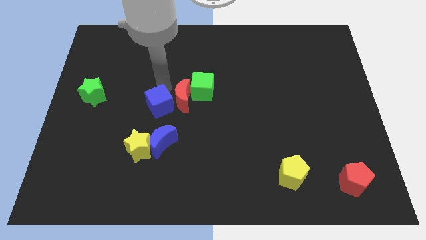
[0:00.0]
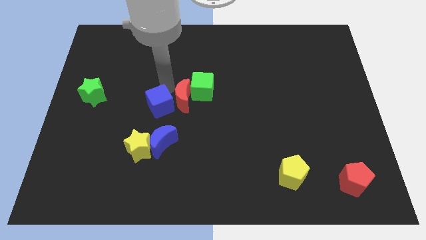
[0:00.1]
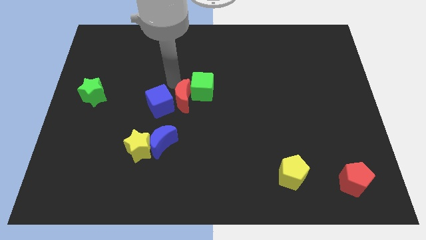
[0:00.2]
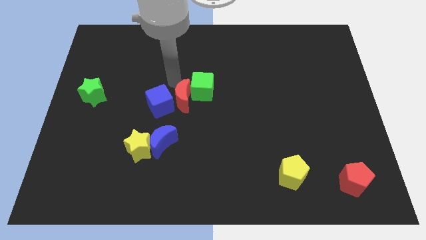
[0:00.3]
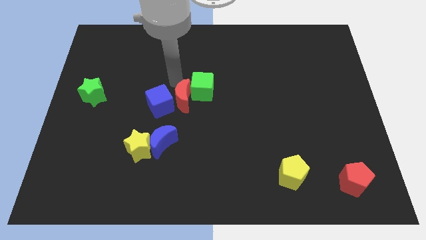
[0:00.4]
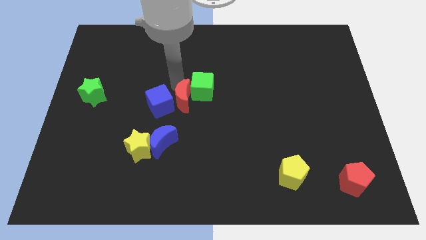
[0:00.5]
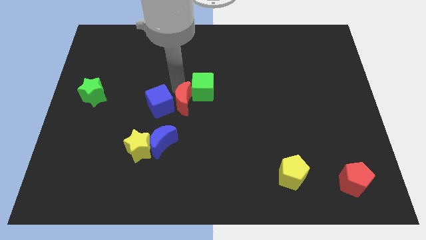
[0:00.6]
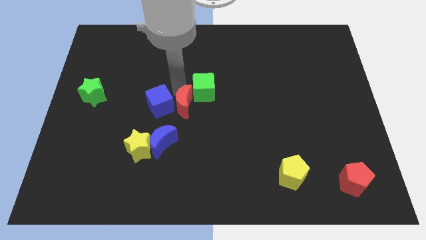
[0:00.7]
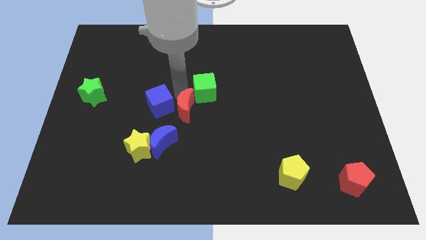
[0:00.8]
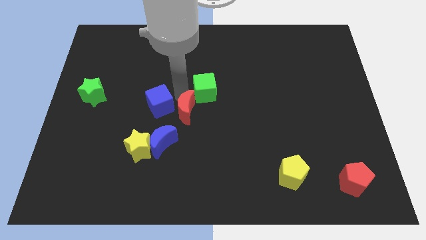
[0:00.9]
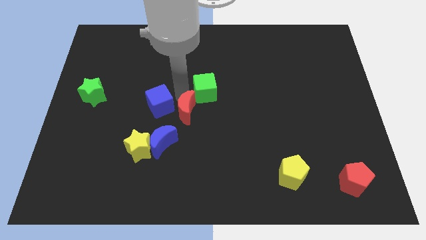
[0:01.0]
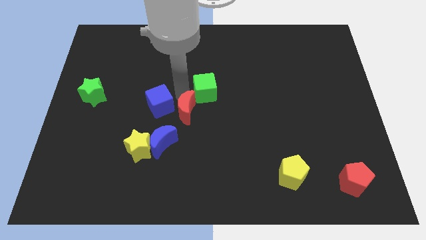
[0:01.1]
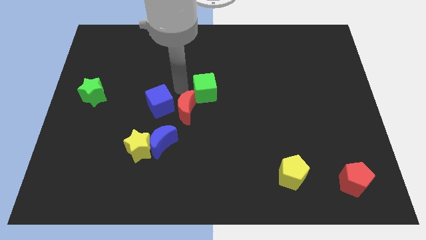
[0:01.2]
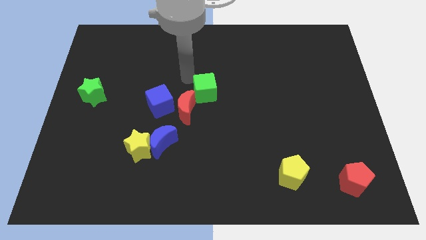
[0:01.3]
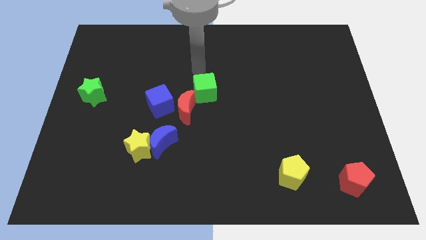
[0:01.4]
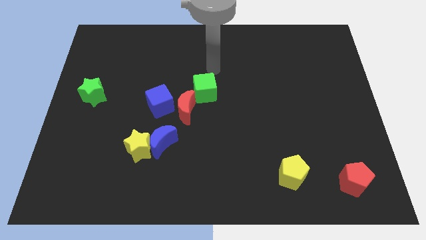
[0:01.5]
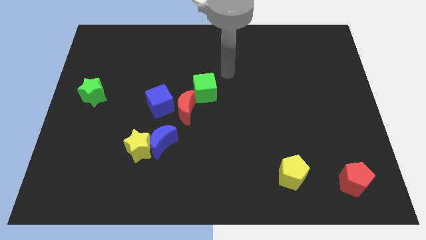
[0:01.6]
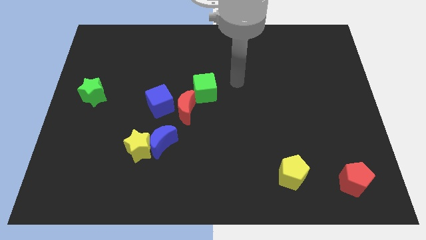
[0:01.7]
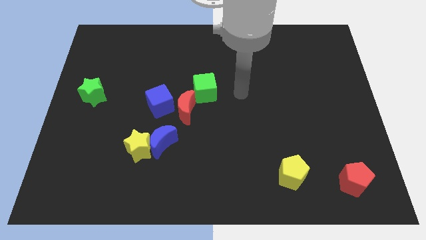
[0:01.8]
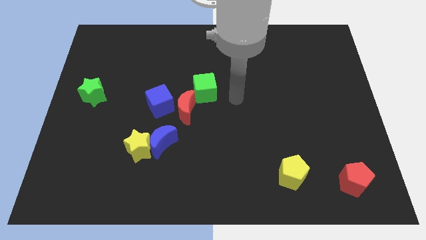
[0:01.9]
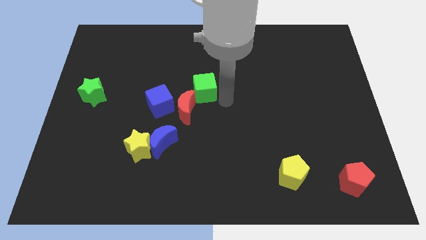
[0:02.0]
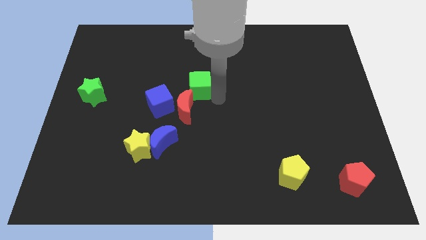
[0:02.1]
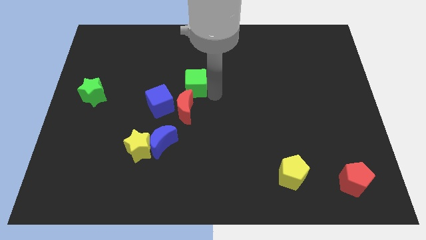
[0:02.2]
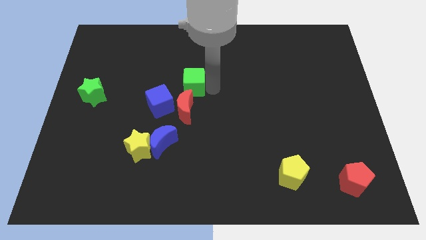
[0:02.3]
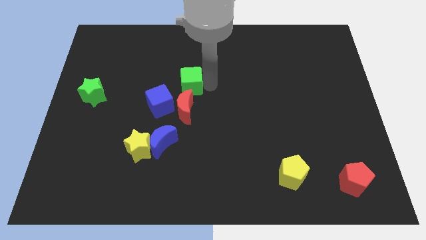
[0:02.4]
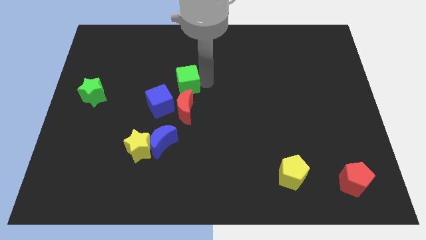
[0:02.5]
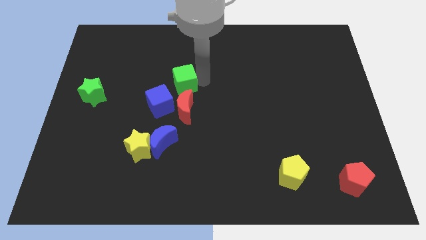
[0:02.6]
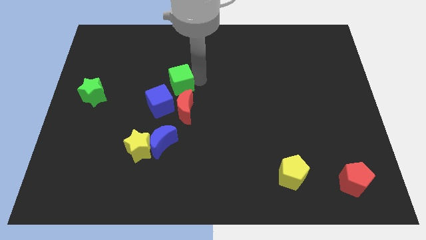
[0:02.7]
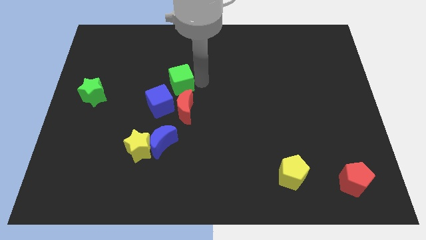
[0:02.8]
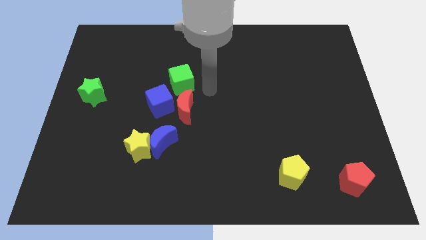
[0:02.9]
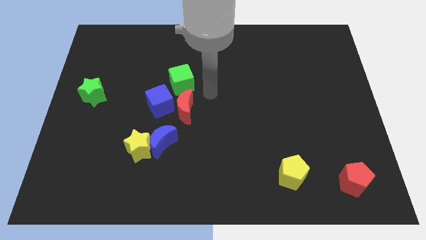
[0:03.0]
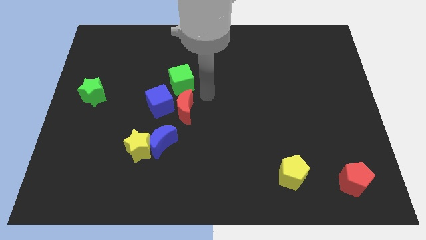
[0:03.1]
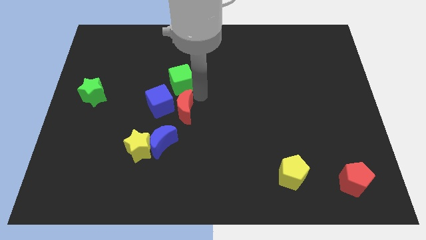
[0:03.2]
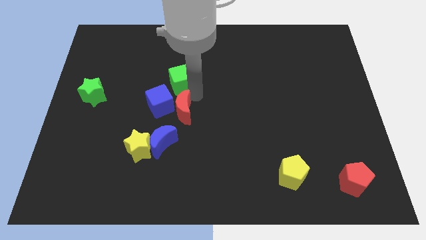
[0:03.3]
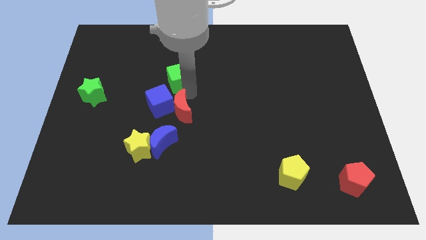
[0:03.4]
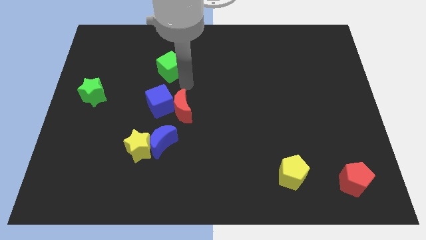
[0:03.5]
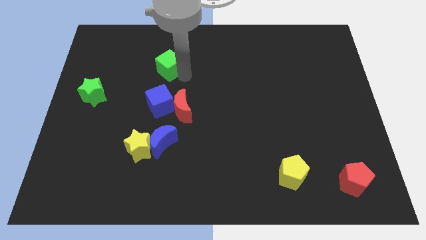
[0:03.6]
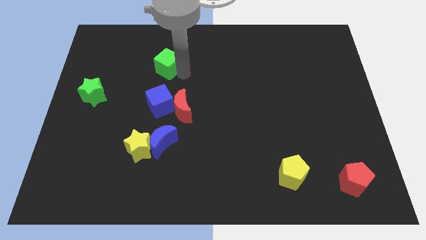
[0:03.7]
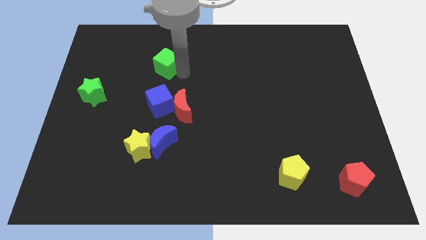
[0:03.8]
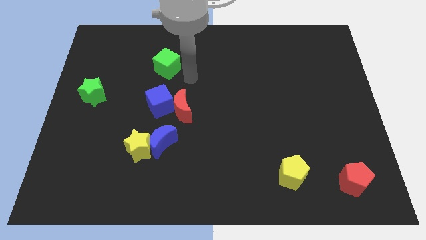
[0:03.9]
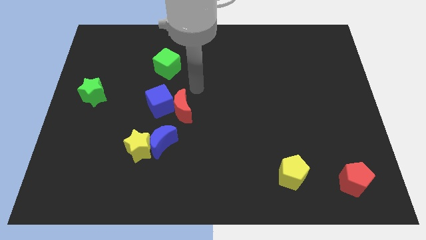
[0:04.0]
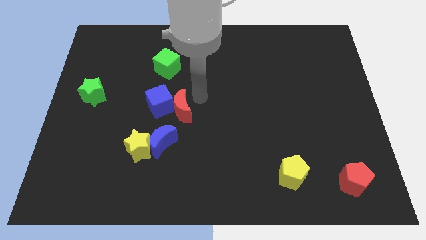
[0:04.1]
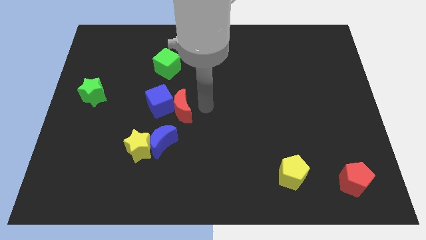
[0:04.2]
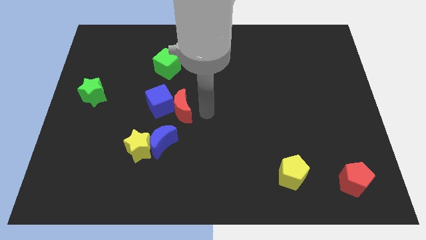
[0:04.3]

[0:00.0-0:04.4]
place the green cube above the blue cube

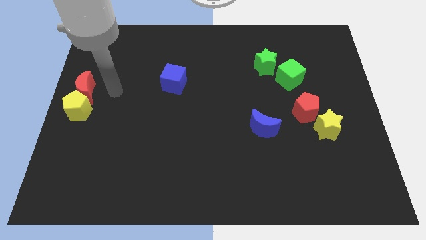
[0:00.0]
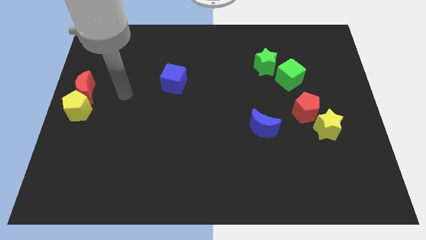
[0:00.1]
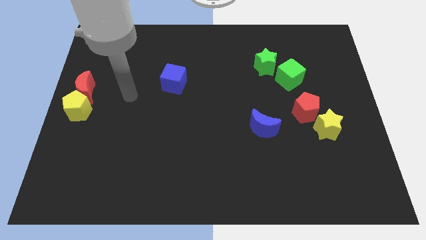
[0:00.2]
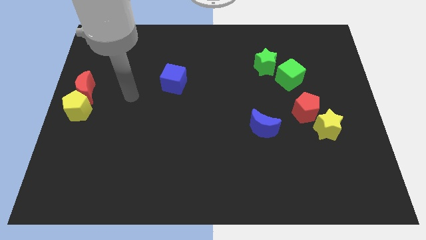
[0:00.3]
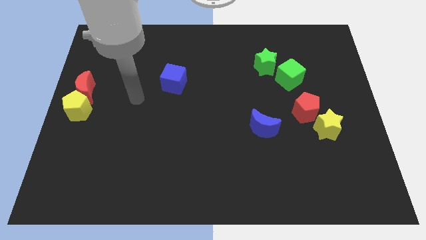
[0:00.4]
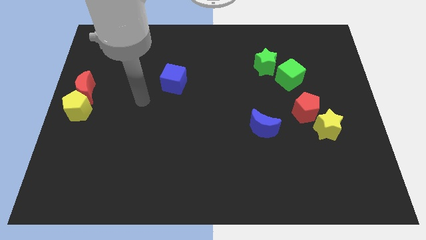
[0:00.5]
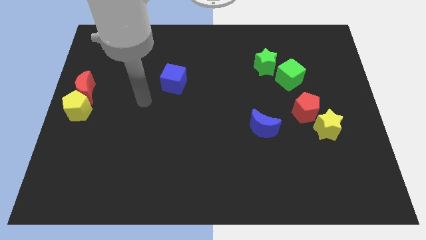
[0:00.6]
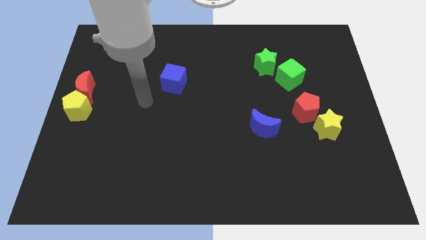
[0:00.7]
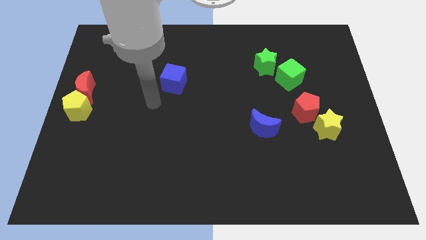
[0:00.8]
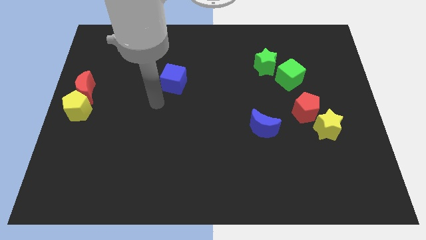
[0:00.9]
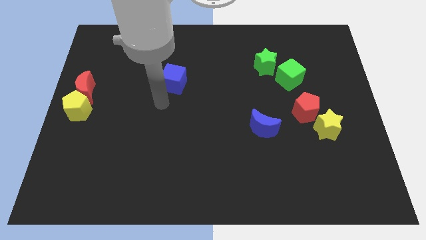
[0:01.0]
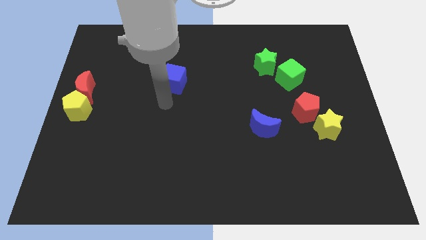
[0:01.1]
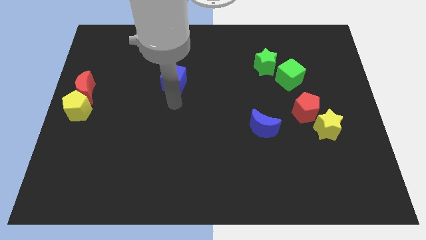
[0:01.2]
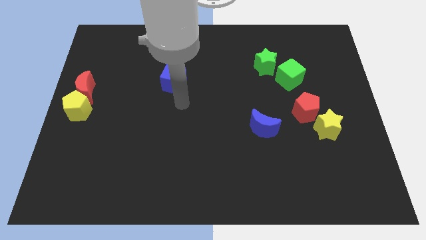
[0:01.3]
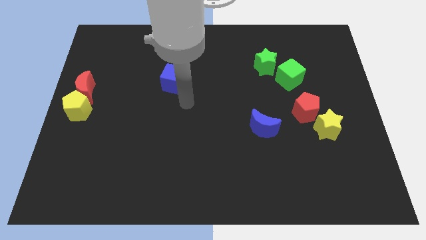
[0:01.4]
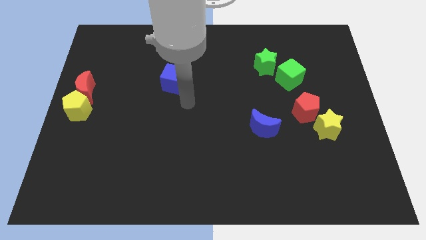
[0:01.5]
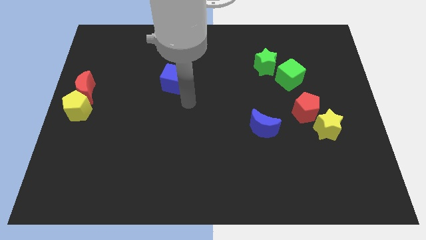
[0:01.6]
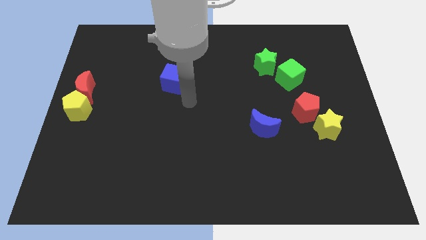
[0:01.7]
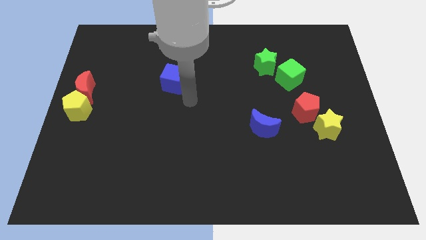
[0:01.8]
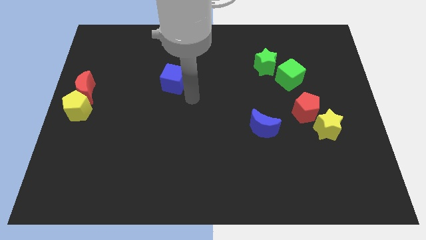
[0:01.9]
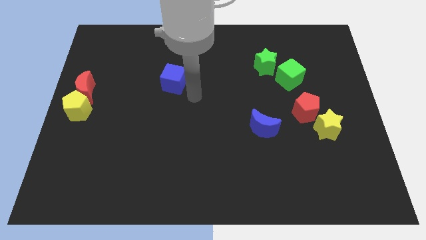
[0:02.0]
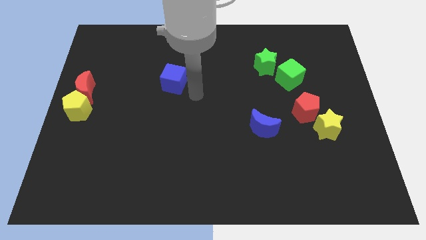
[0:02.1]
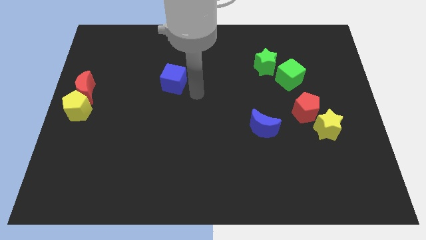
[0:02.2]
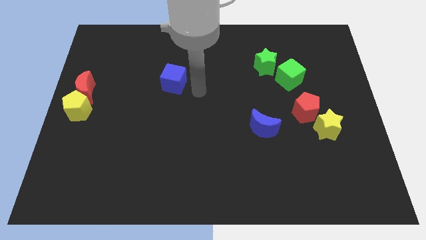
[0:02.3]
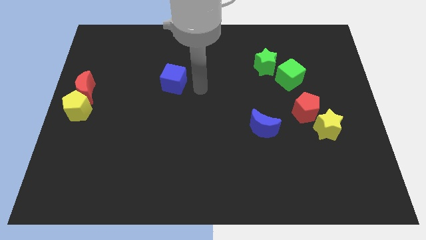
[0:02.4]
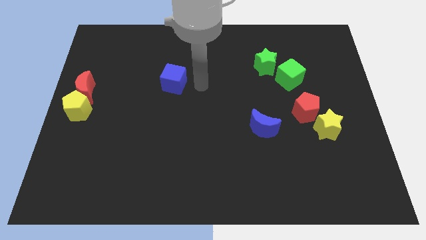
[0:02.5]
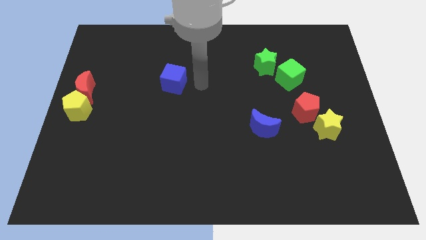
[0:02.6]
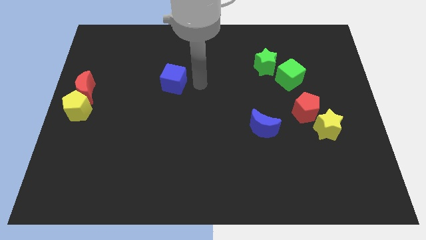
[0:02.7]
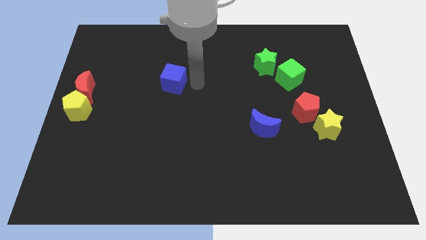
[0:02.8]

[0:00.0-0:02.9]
move your are towards the blue cube

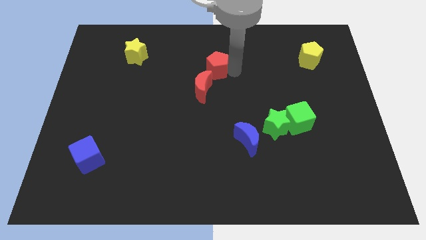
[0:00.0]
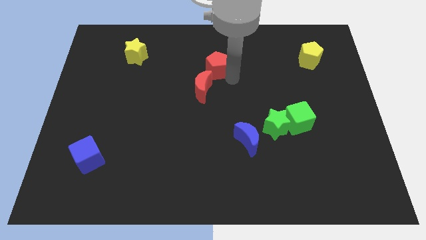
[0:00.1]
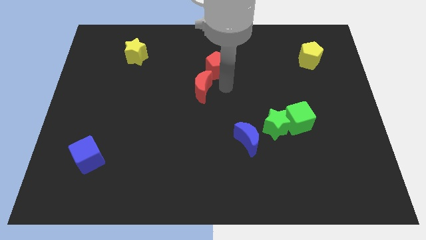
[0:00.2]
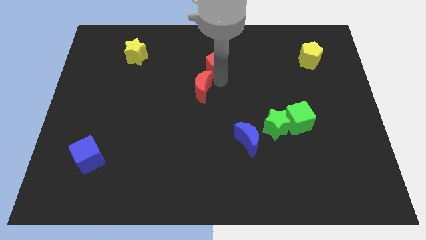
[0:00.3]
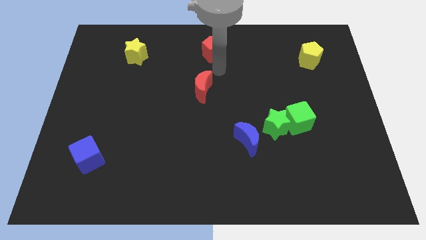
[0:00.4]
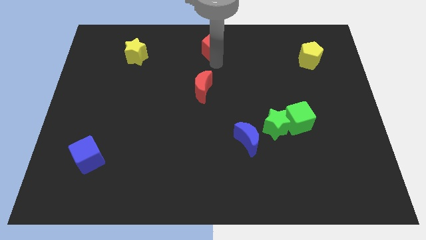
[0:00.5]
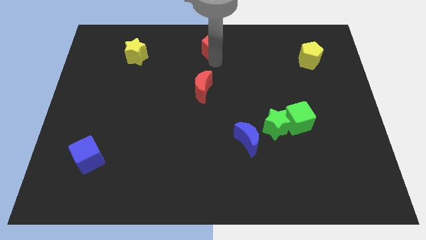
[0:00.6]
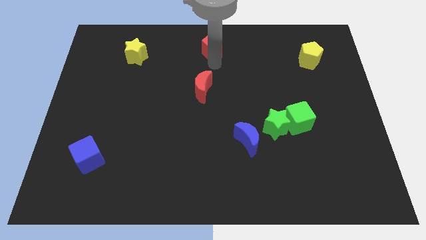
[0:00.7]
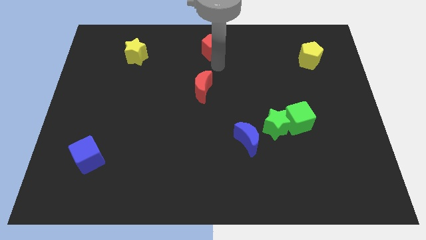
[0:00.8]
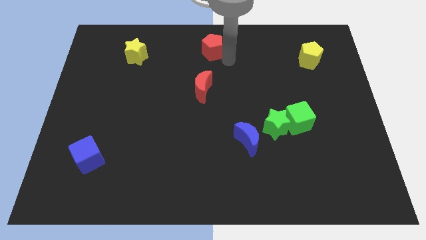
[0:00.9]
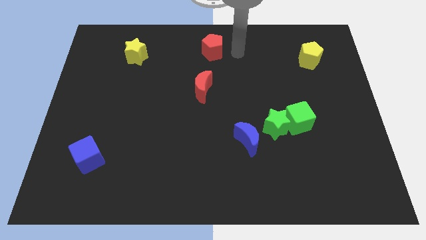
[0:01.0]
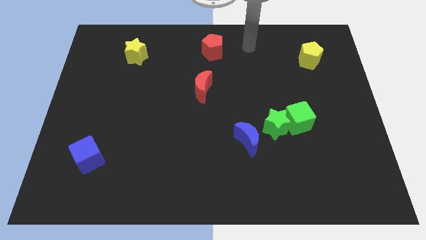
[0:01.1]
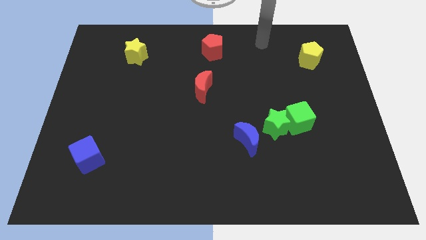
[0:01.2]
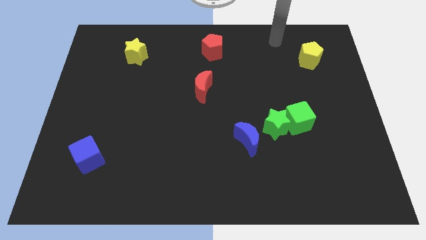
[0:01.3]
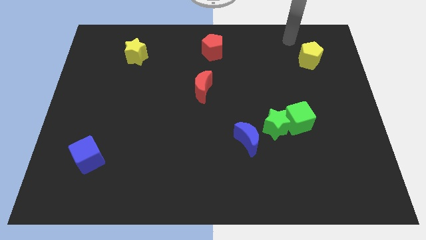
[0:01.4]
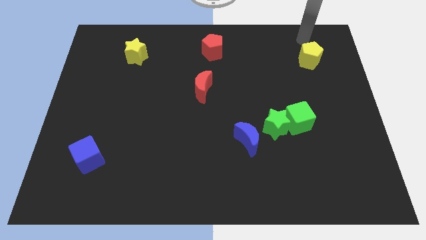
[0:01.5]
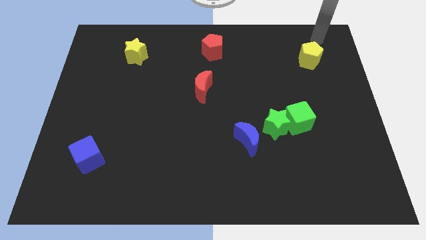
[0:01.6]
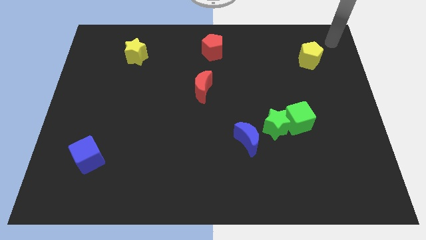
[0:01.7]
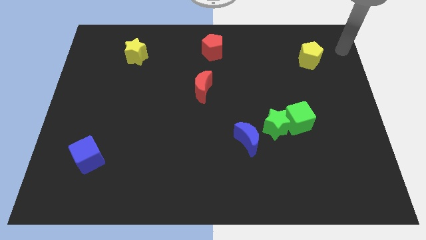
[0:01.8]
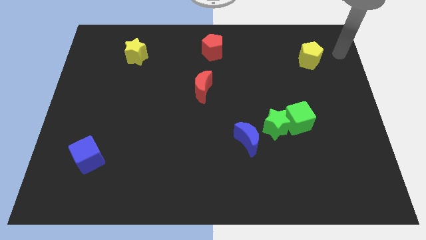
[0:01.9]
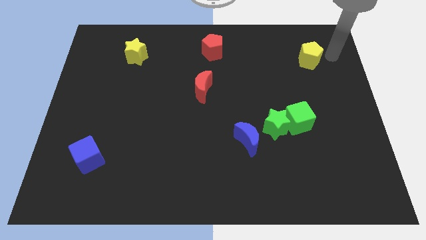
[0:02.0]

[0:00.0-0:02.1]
place red pentagon at the top center
